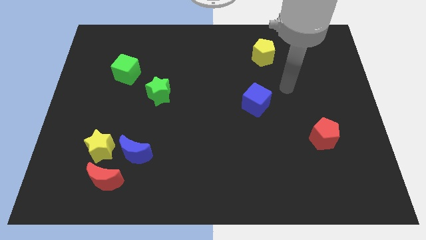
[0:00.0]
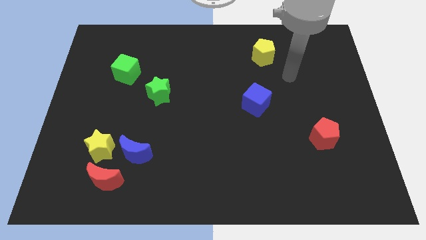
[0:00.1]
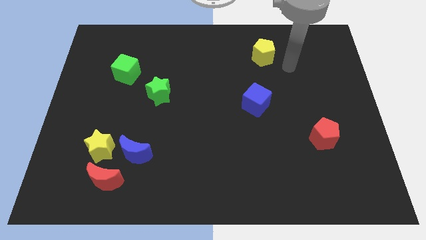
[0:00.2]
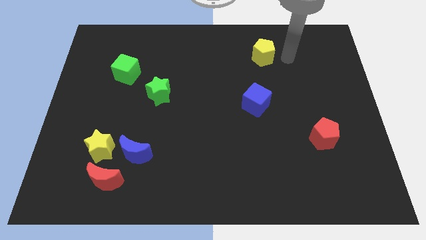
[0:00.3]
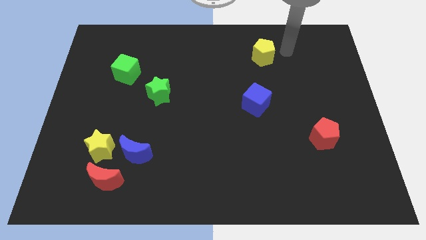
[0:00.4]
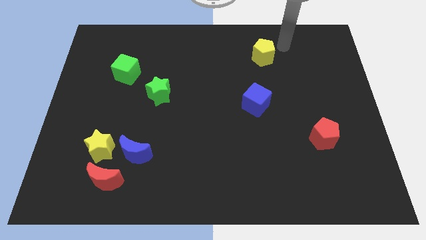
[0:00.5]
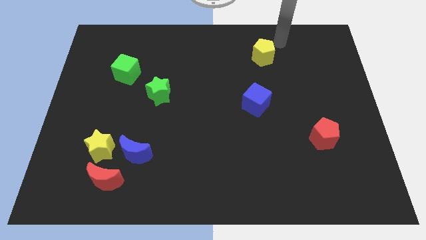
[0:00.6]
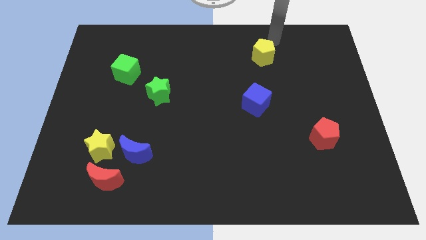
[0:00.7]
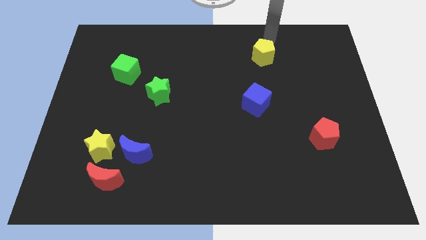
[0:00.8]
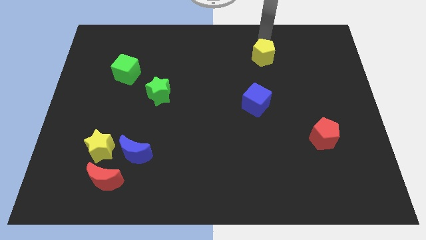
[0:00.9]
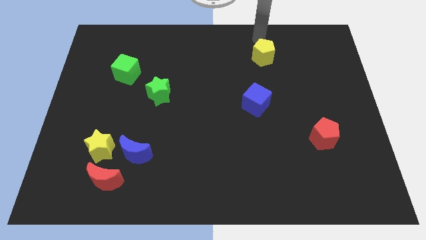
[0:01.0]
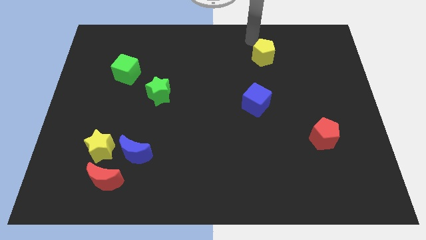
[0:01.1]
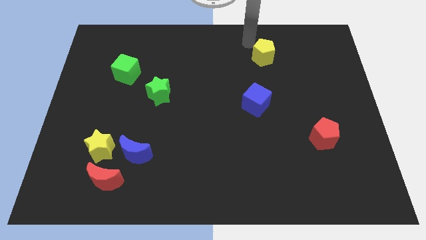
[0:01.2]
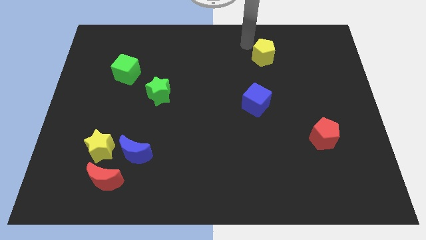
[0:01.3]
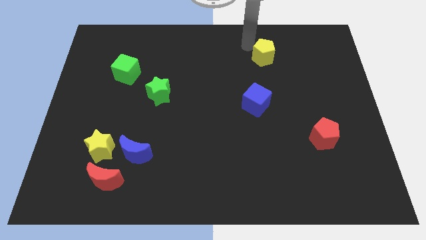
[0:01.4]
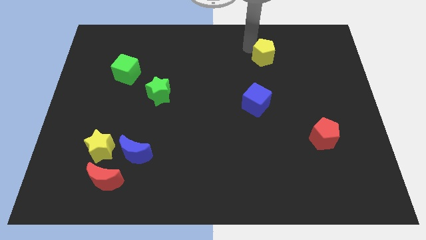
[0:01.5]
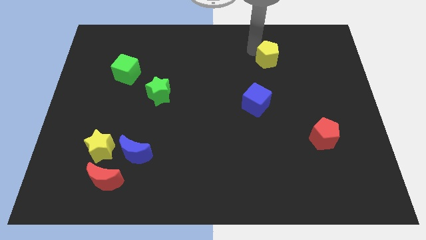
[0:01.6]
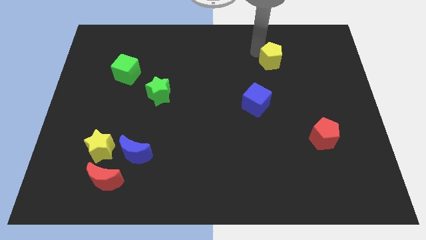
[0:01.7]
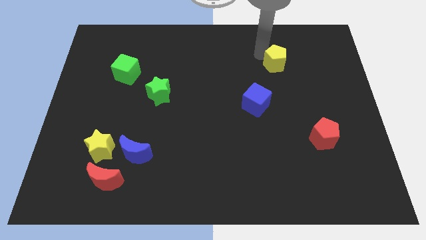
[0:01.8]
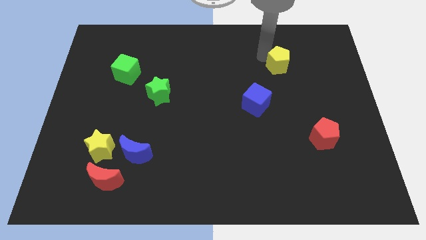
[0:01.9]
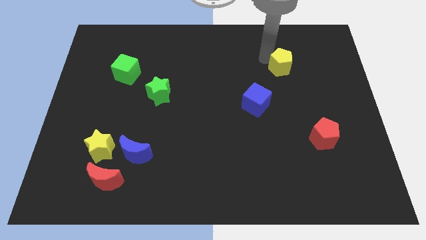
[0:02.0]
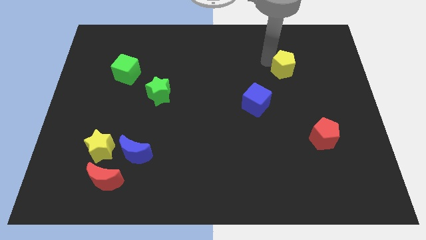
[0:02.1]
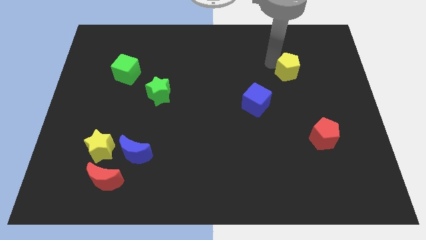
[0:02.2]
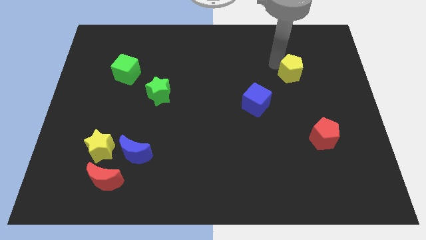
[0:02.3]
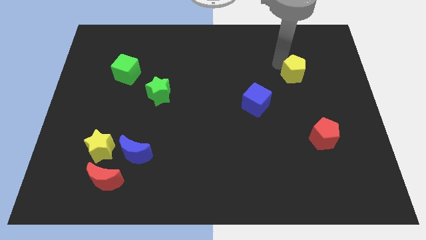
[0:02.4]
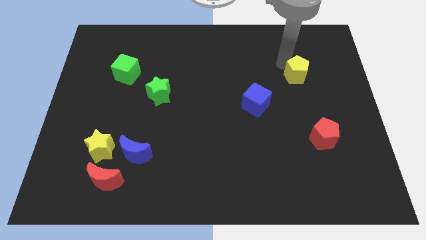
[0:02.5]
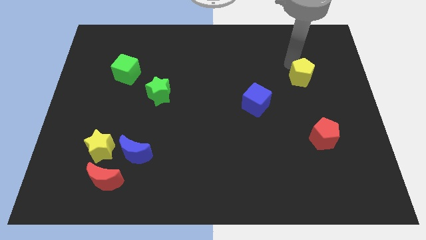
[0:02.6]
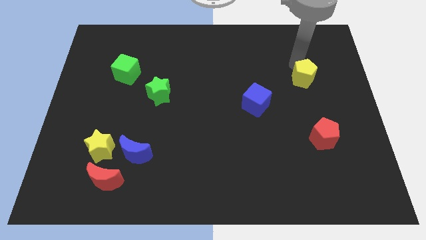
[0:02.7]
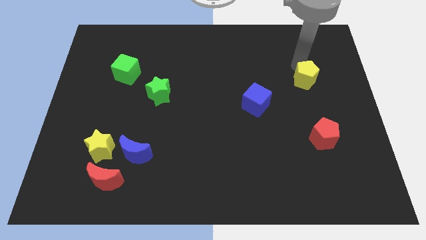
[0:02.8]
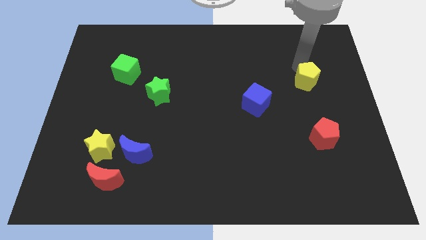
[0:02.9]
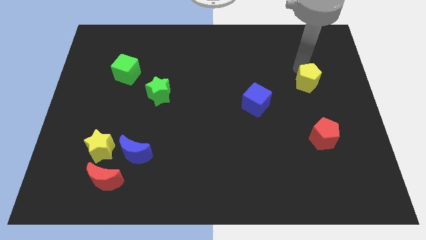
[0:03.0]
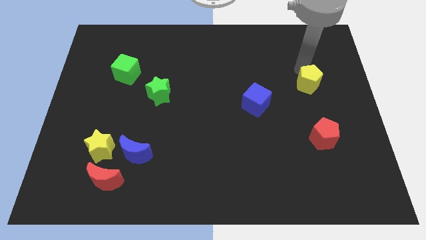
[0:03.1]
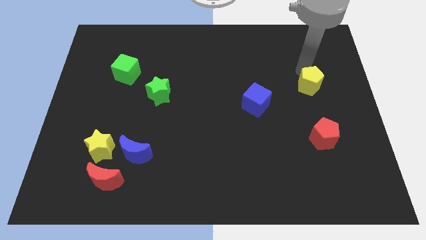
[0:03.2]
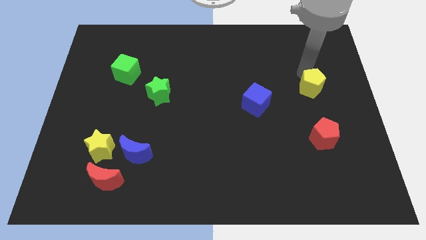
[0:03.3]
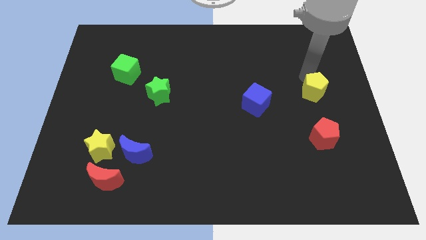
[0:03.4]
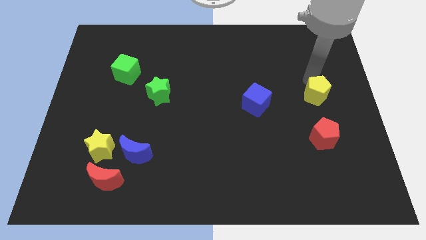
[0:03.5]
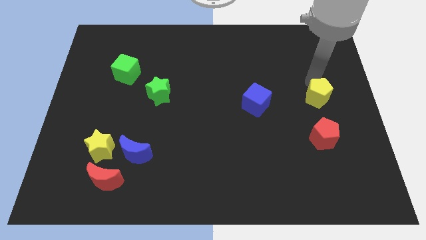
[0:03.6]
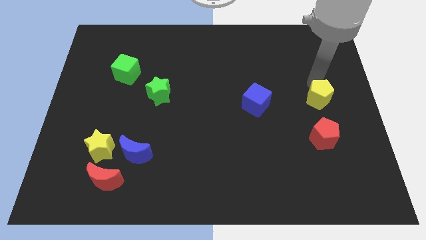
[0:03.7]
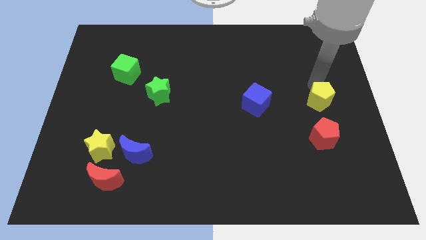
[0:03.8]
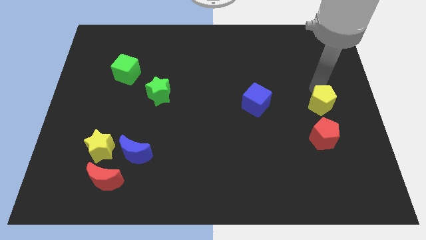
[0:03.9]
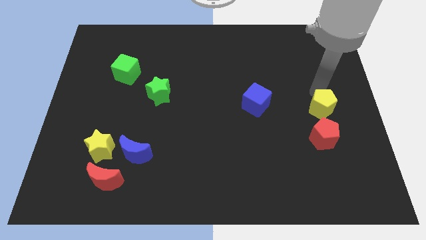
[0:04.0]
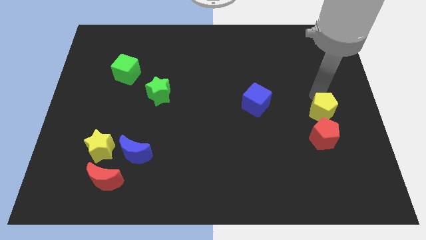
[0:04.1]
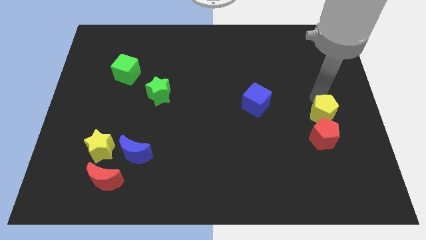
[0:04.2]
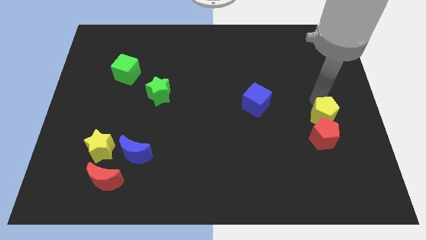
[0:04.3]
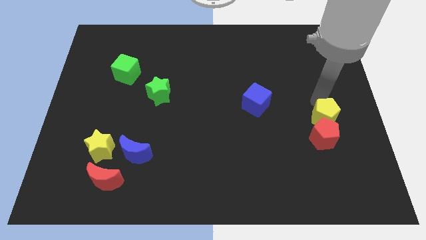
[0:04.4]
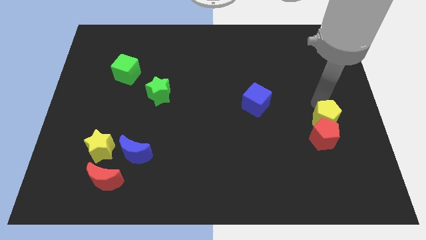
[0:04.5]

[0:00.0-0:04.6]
slide the yellow pentagon close to the red pentagon

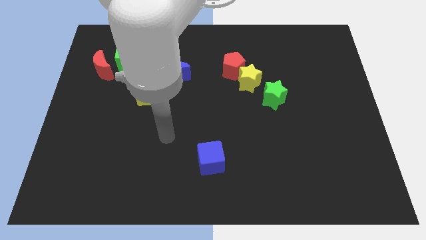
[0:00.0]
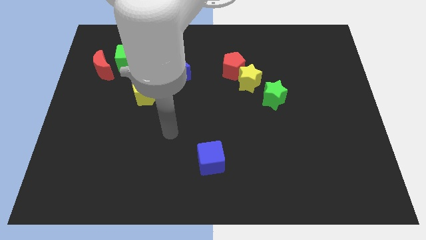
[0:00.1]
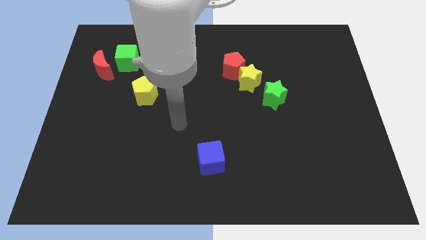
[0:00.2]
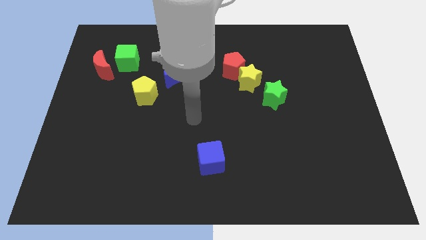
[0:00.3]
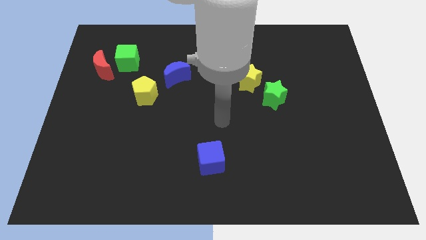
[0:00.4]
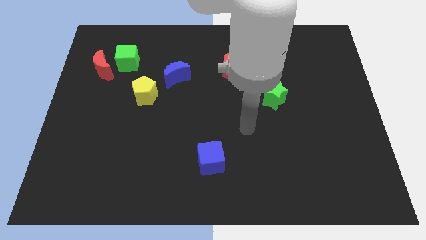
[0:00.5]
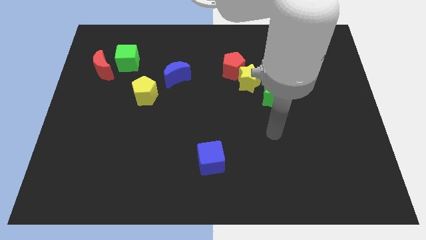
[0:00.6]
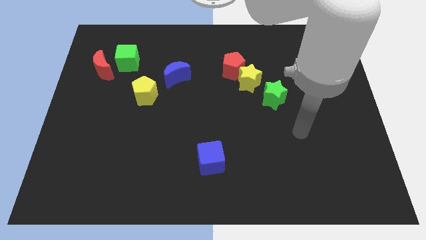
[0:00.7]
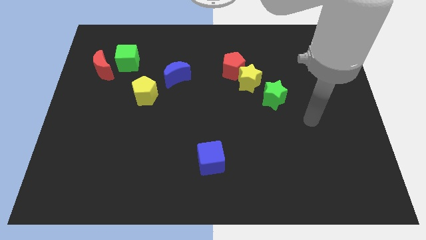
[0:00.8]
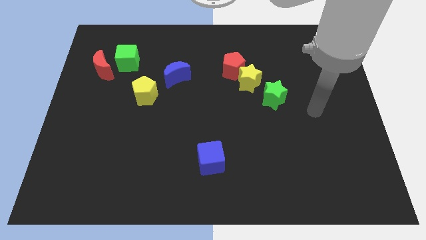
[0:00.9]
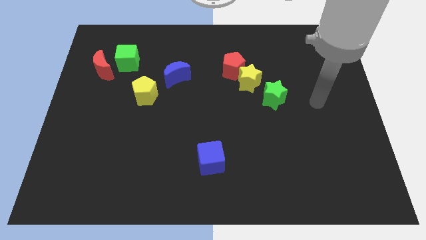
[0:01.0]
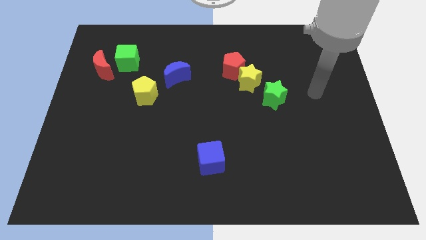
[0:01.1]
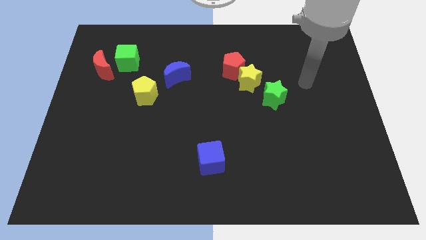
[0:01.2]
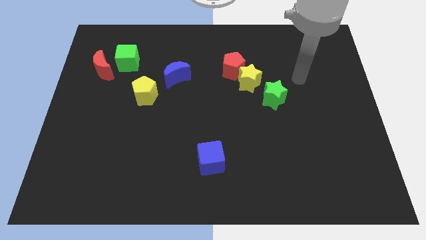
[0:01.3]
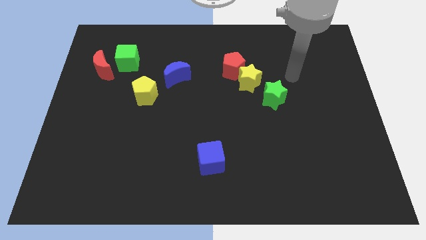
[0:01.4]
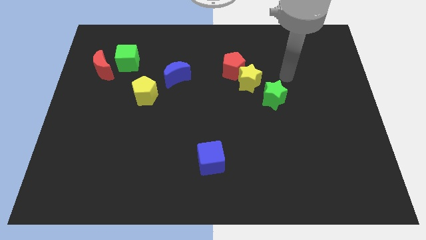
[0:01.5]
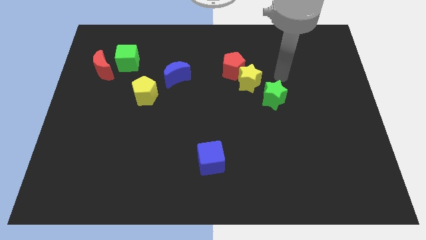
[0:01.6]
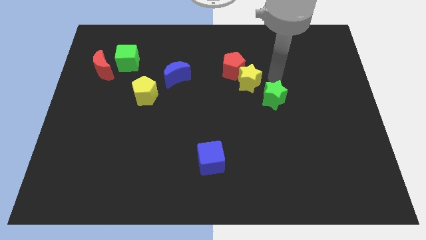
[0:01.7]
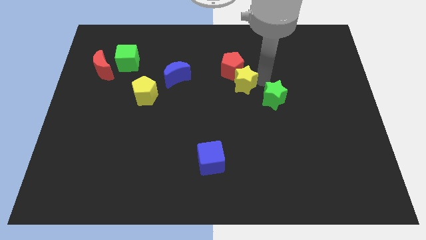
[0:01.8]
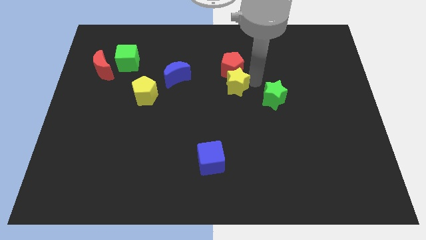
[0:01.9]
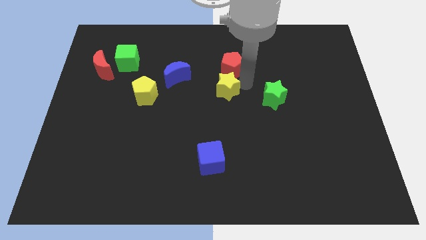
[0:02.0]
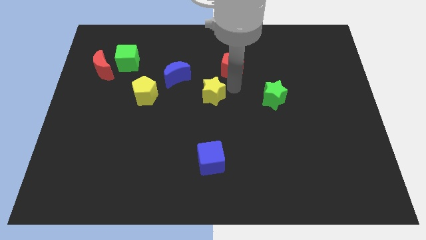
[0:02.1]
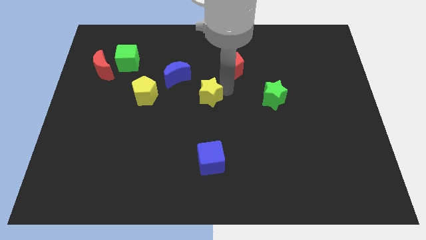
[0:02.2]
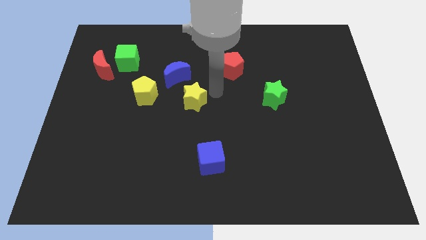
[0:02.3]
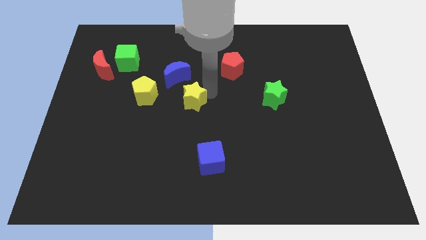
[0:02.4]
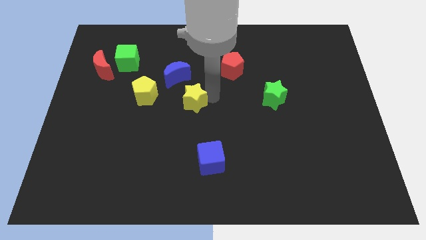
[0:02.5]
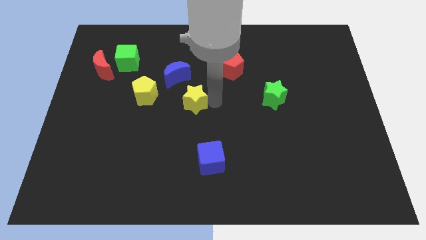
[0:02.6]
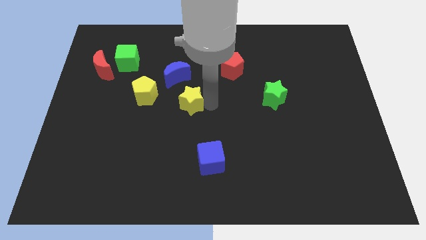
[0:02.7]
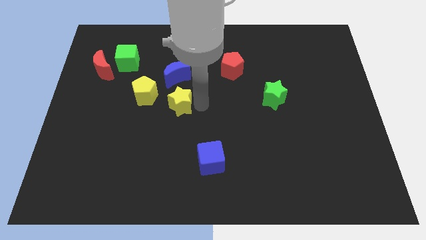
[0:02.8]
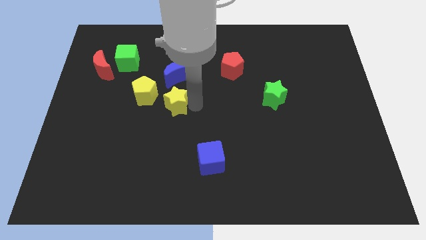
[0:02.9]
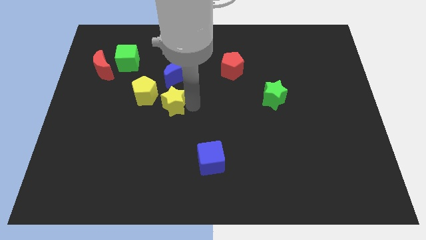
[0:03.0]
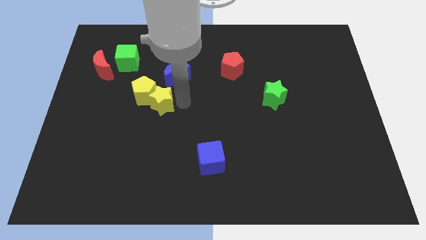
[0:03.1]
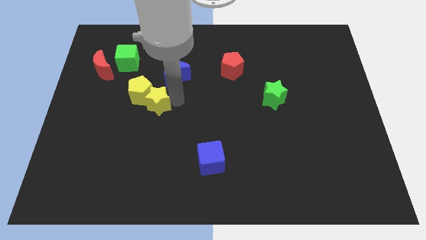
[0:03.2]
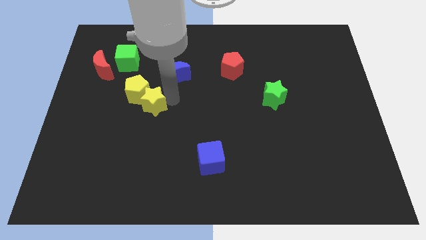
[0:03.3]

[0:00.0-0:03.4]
put the yellow star to the yellow pentagon

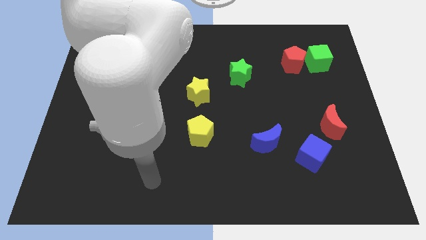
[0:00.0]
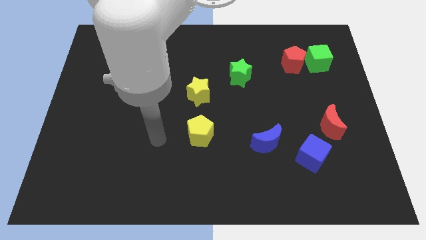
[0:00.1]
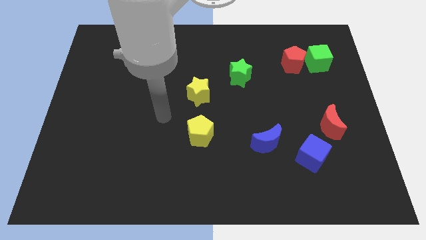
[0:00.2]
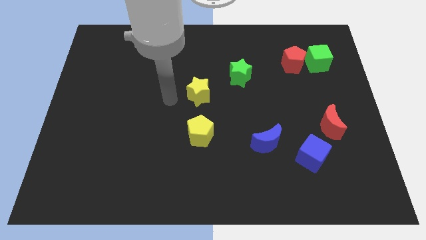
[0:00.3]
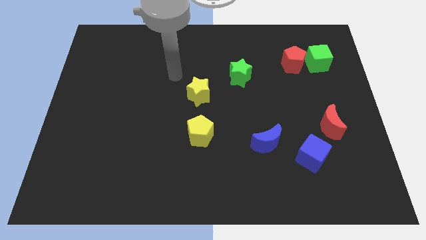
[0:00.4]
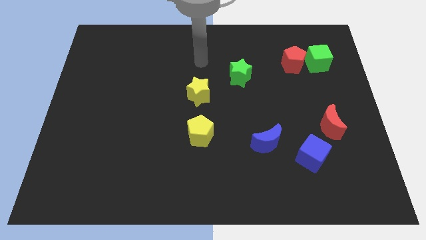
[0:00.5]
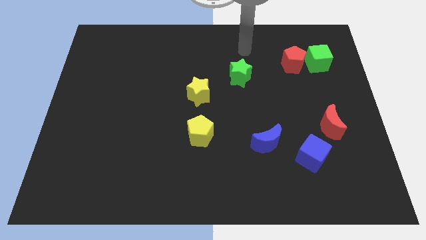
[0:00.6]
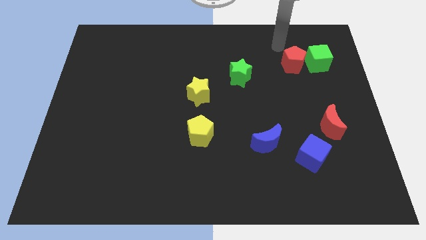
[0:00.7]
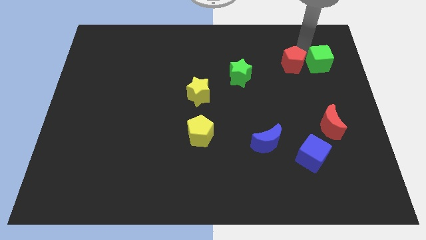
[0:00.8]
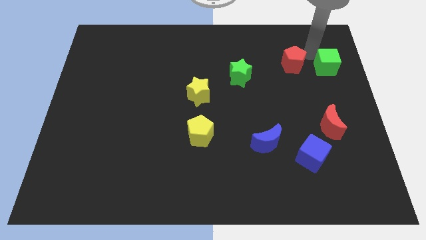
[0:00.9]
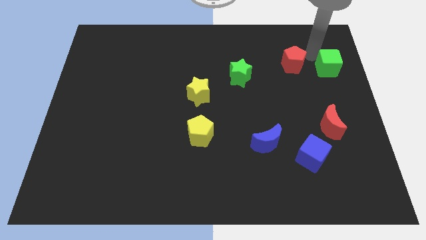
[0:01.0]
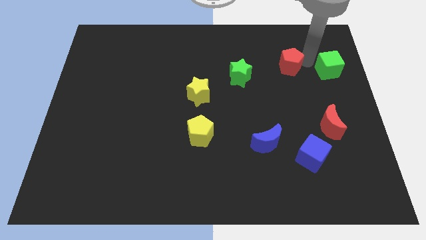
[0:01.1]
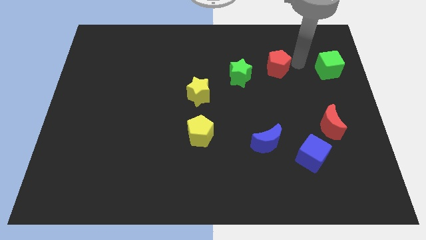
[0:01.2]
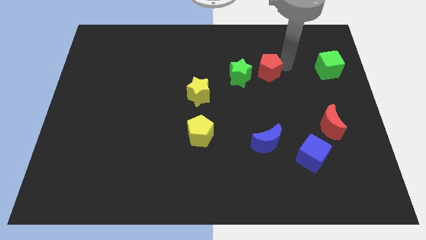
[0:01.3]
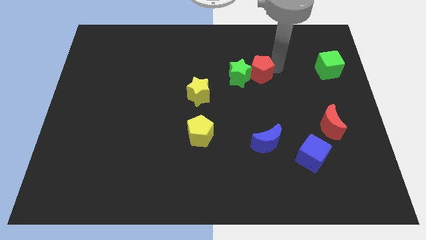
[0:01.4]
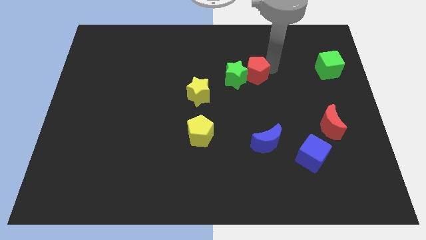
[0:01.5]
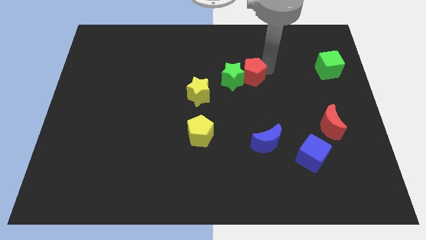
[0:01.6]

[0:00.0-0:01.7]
push the red pentagon next to the green star
